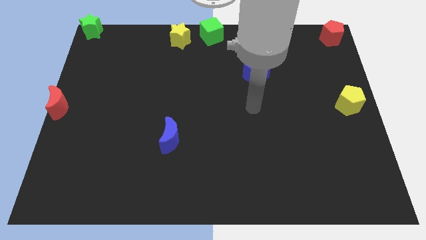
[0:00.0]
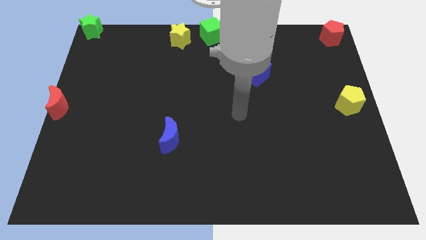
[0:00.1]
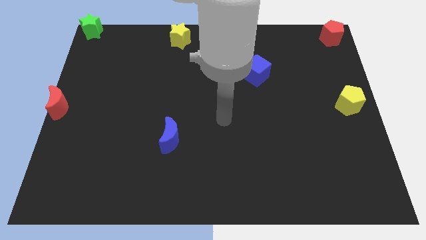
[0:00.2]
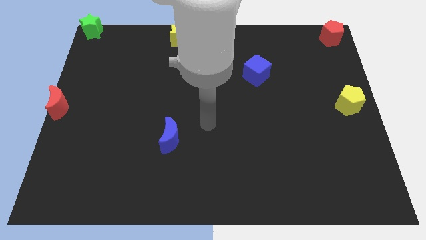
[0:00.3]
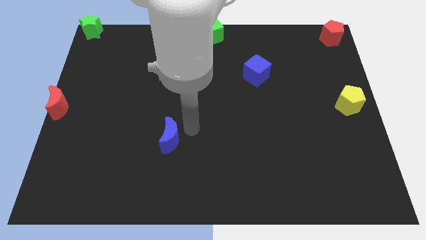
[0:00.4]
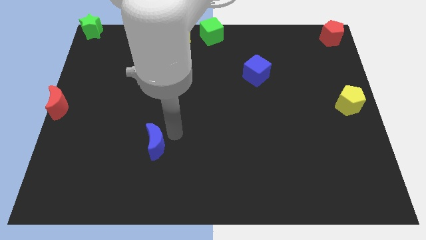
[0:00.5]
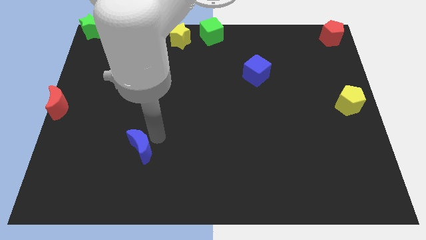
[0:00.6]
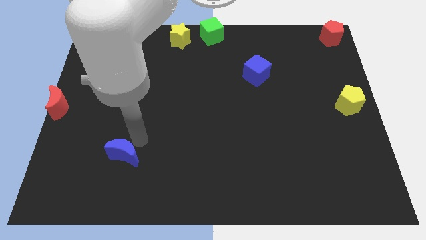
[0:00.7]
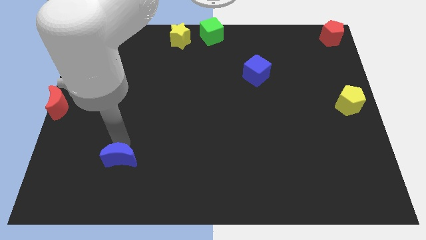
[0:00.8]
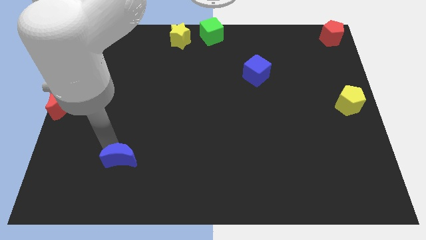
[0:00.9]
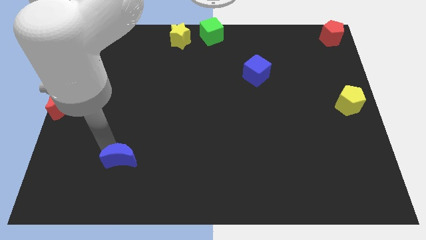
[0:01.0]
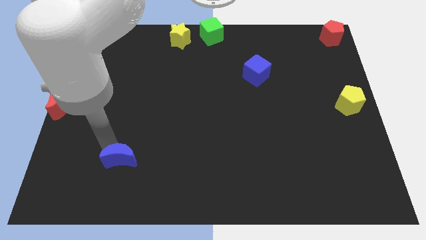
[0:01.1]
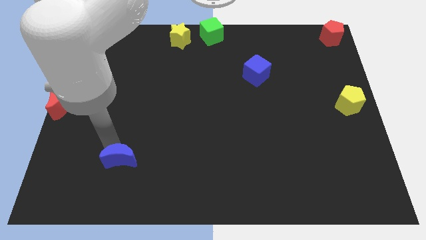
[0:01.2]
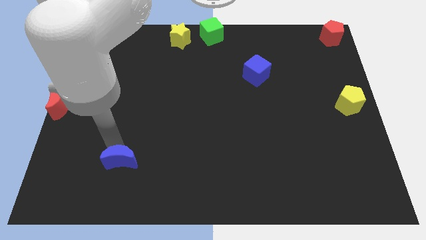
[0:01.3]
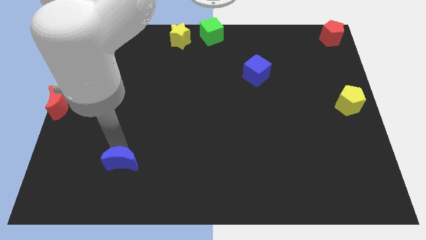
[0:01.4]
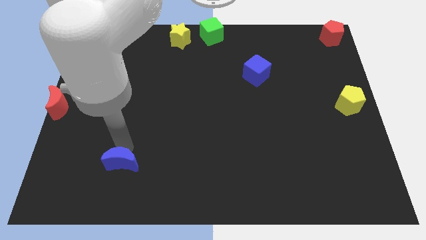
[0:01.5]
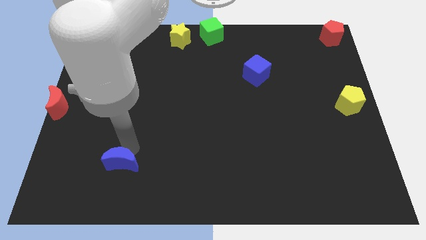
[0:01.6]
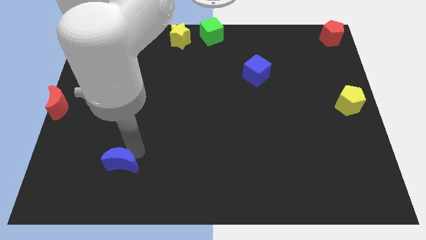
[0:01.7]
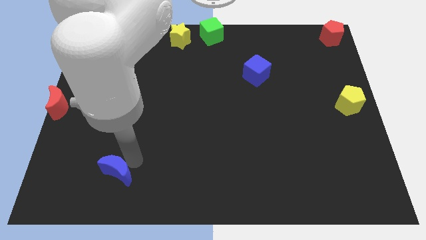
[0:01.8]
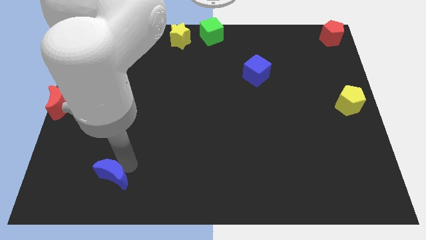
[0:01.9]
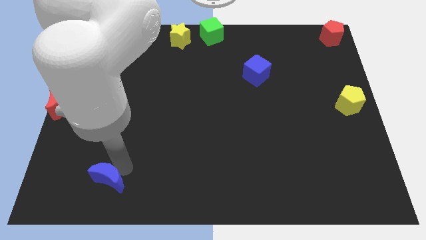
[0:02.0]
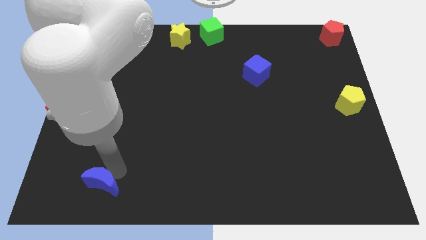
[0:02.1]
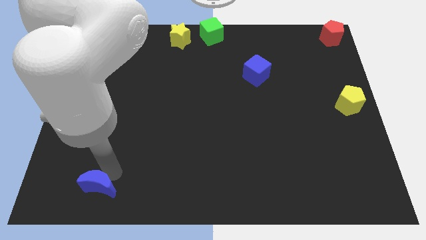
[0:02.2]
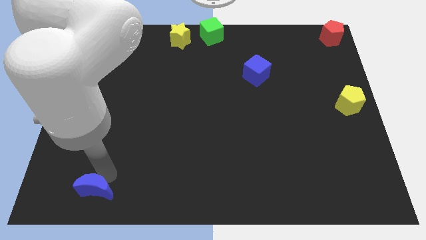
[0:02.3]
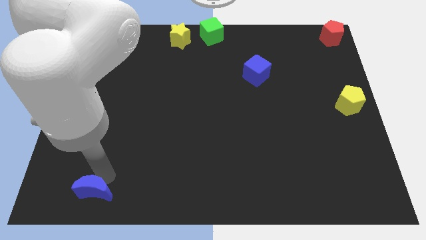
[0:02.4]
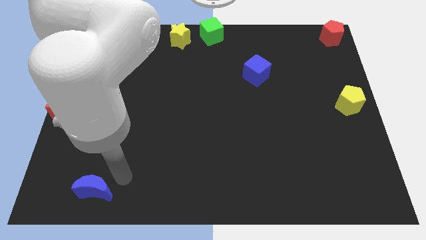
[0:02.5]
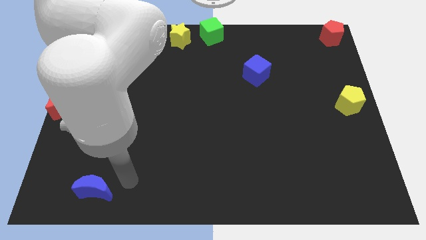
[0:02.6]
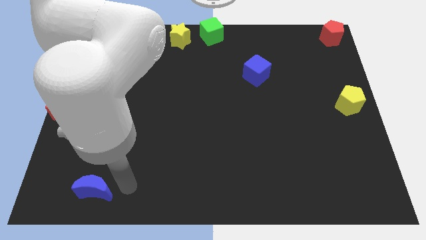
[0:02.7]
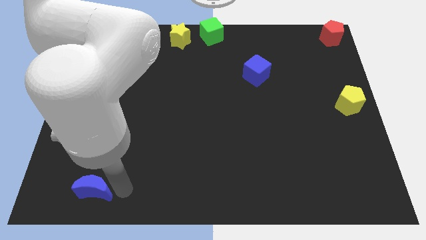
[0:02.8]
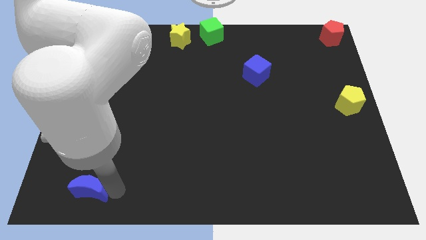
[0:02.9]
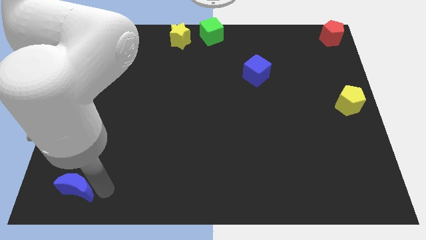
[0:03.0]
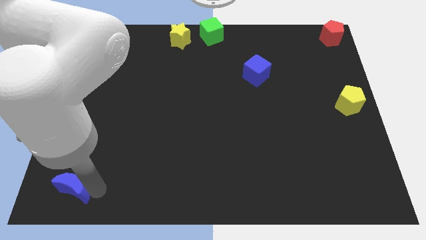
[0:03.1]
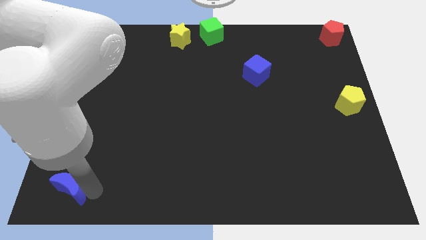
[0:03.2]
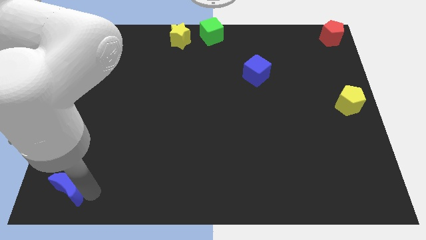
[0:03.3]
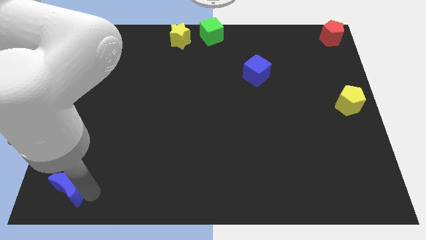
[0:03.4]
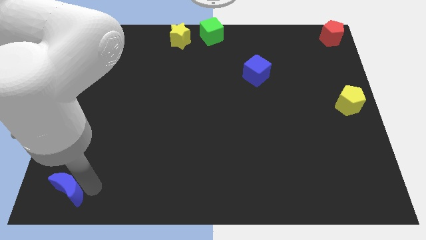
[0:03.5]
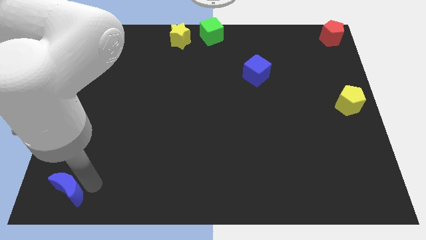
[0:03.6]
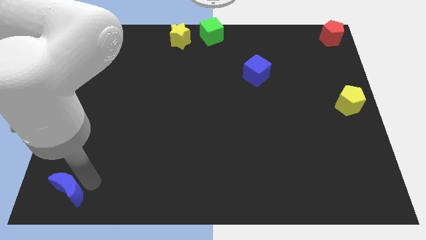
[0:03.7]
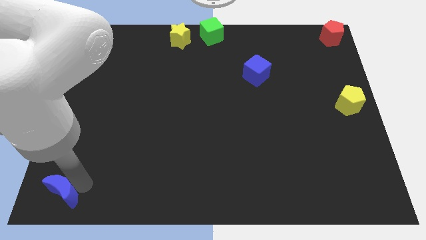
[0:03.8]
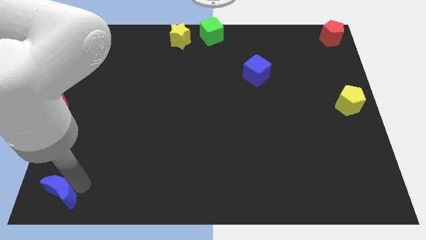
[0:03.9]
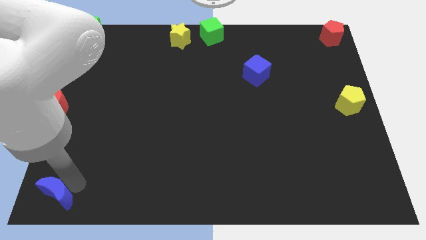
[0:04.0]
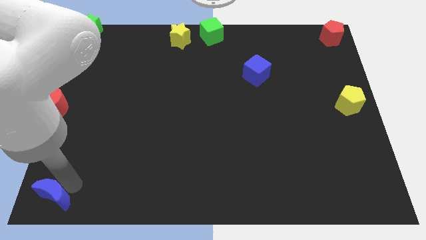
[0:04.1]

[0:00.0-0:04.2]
move the blue moon to the bottom left corner of the board

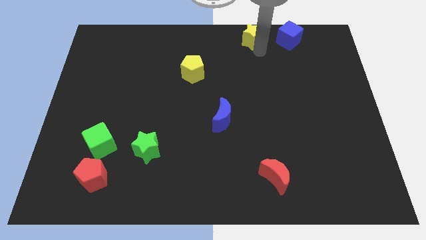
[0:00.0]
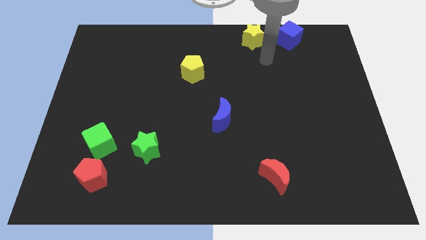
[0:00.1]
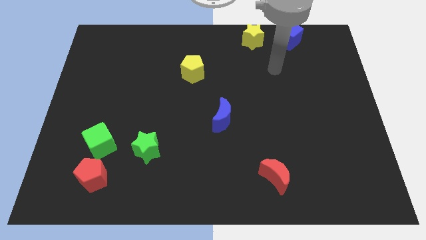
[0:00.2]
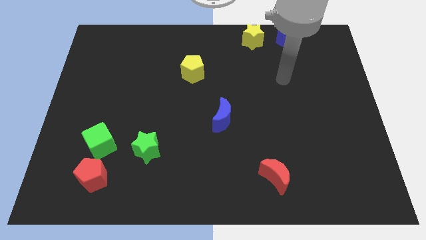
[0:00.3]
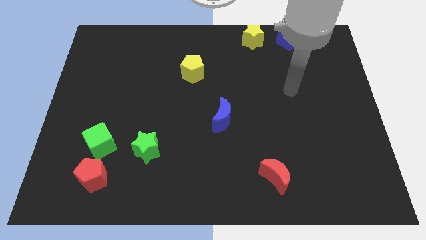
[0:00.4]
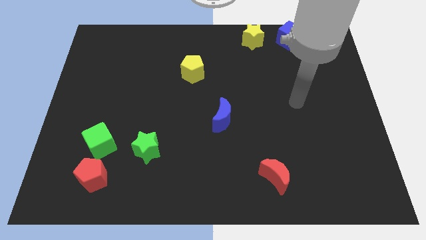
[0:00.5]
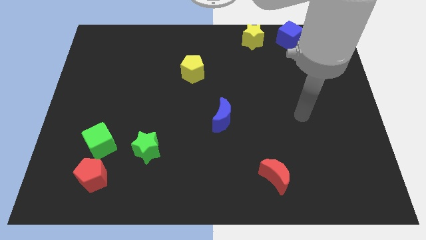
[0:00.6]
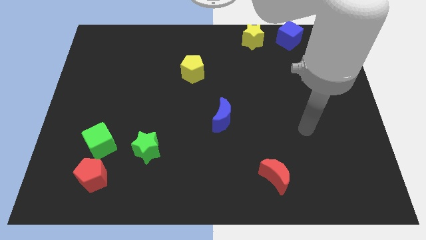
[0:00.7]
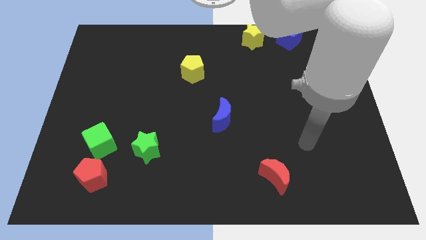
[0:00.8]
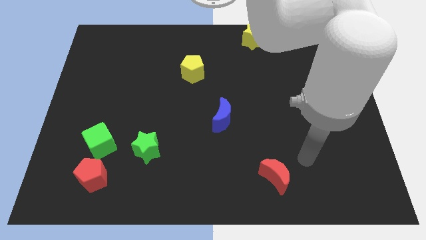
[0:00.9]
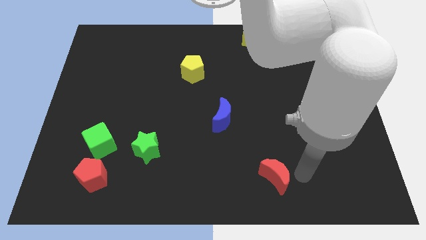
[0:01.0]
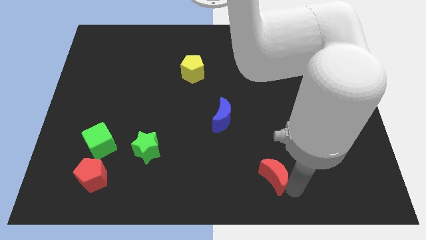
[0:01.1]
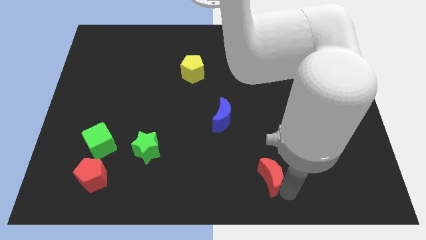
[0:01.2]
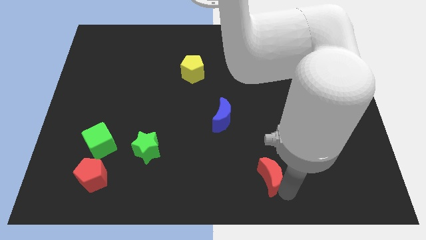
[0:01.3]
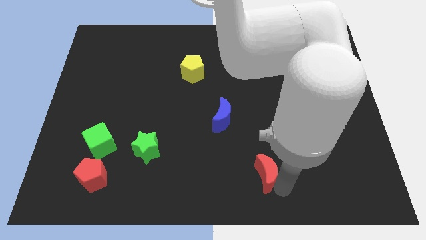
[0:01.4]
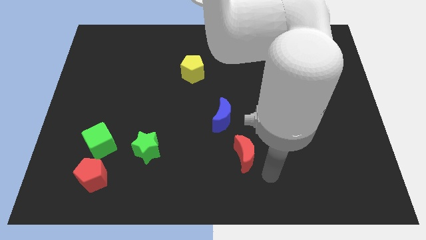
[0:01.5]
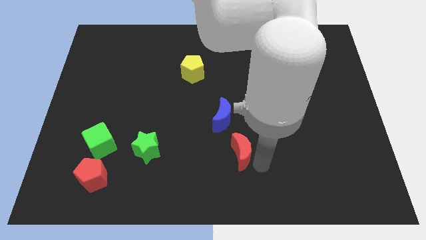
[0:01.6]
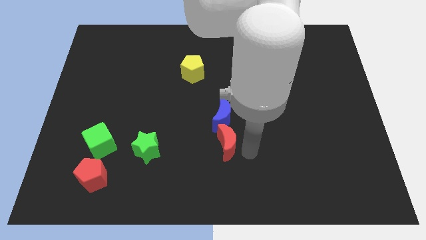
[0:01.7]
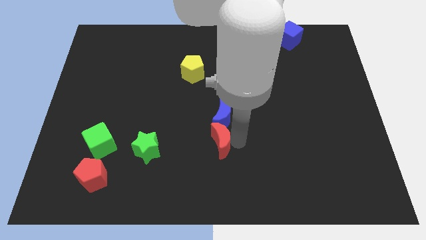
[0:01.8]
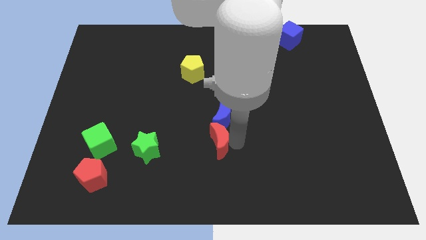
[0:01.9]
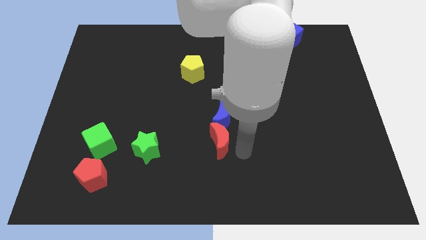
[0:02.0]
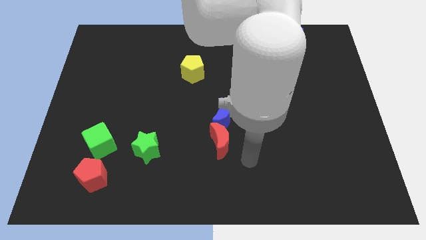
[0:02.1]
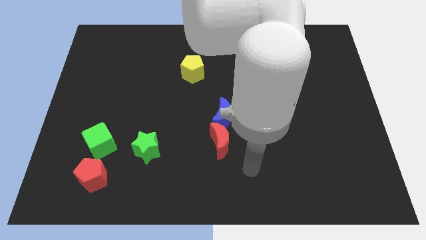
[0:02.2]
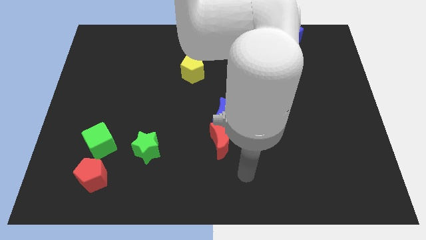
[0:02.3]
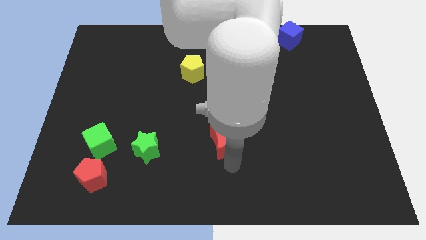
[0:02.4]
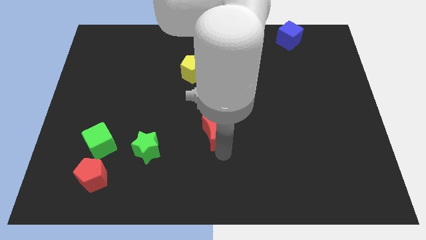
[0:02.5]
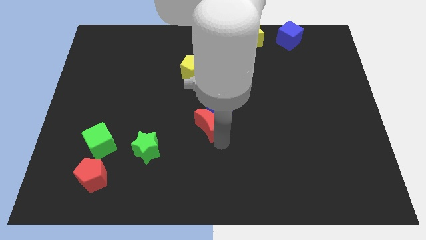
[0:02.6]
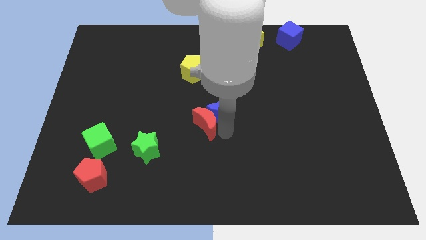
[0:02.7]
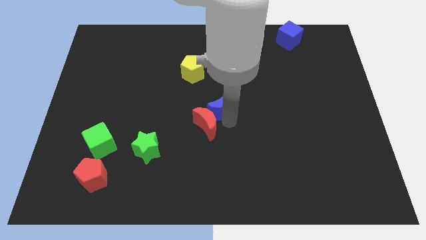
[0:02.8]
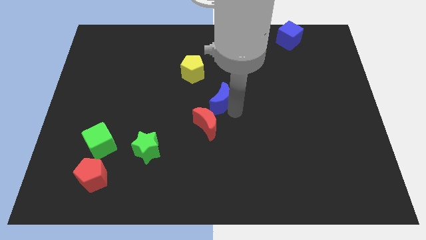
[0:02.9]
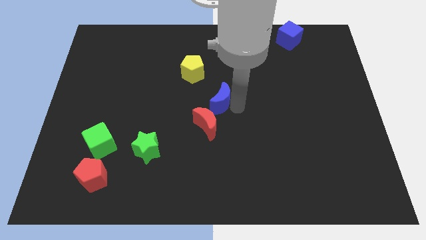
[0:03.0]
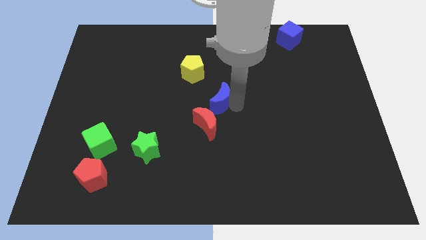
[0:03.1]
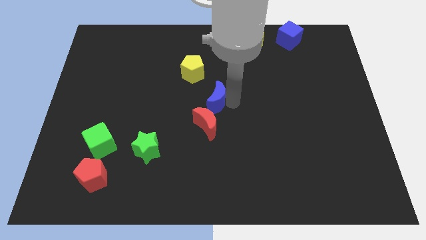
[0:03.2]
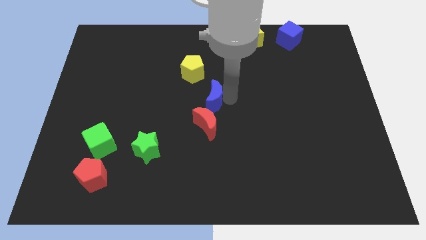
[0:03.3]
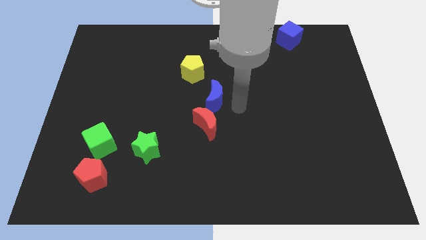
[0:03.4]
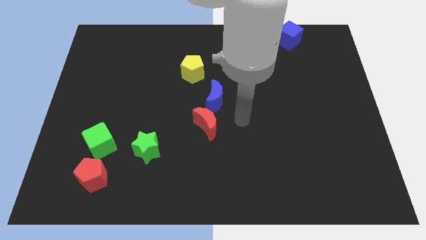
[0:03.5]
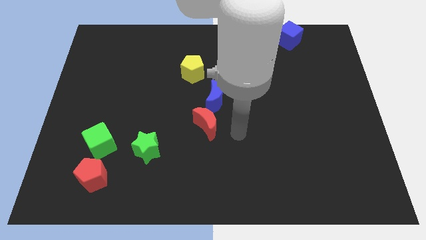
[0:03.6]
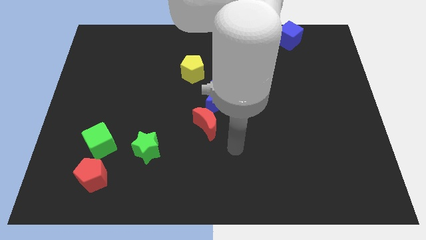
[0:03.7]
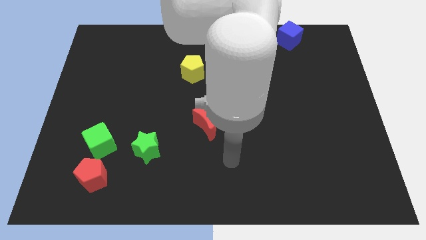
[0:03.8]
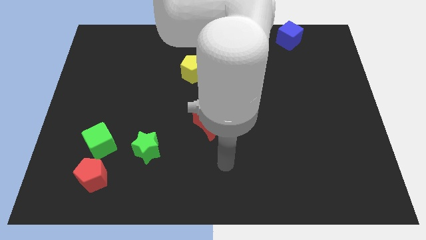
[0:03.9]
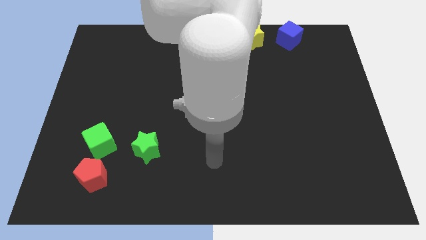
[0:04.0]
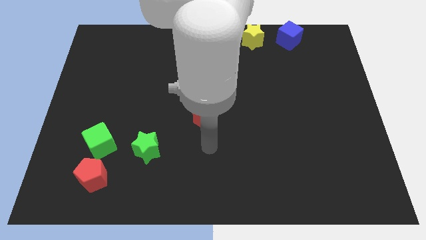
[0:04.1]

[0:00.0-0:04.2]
move the blue crescent and red crescent to the center of the board

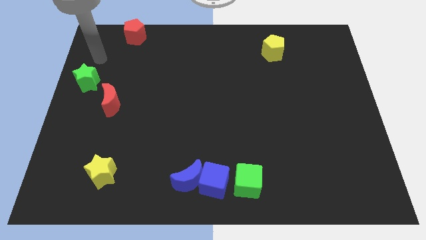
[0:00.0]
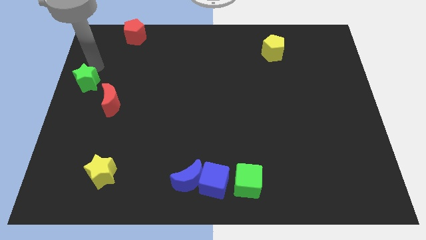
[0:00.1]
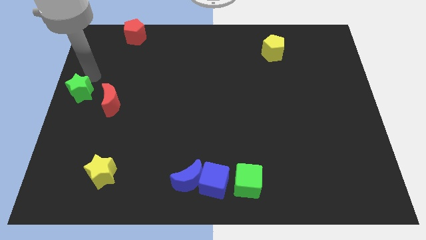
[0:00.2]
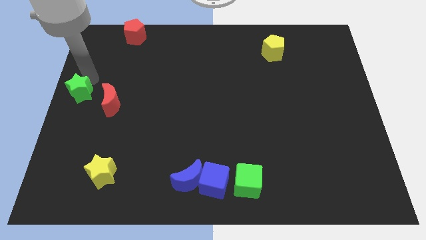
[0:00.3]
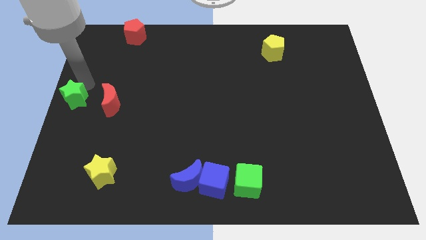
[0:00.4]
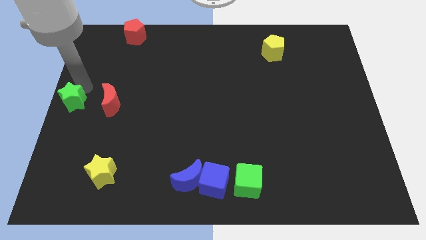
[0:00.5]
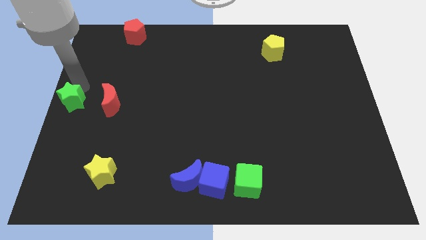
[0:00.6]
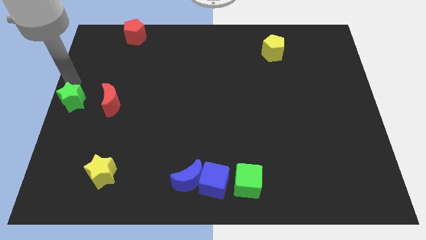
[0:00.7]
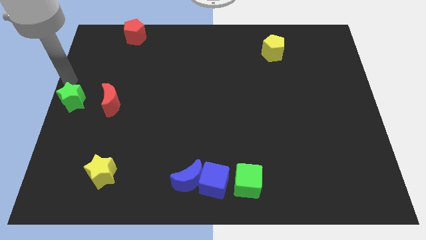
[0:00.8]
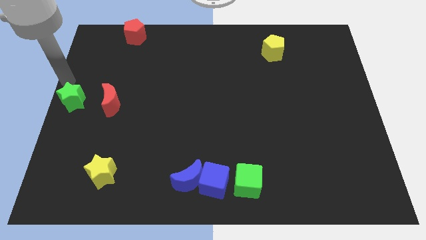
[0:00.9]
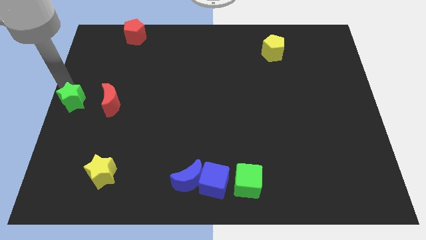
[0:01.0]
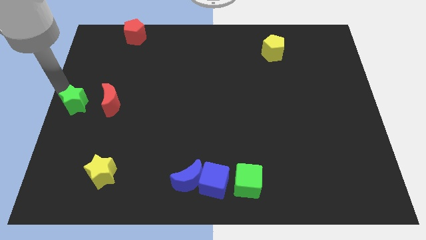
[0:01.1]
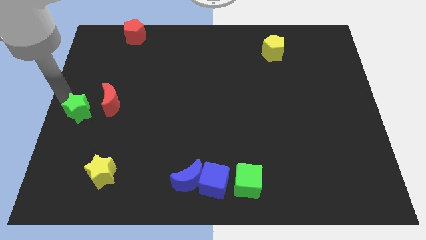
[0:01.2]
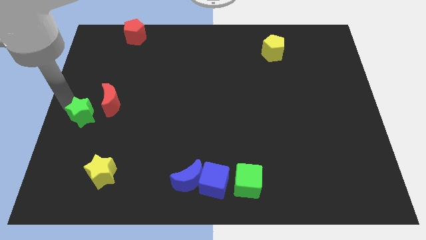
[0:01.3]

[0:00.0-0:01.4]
push the green star towards bottom
